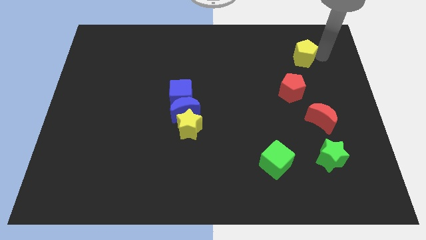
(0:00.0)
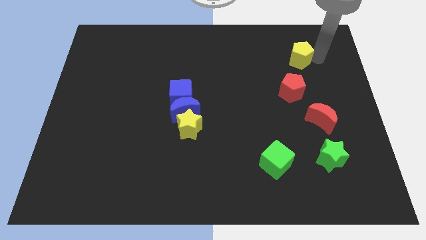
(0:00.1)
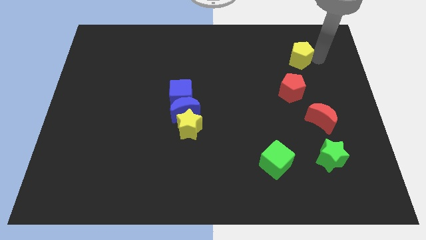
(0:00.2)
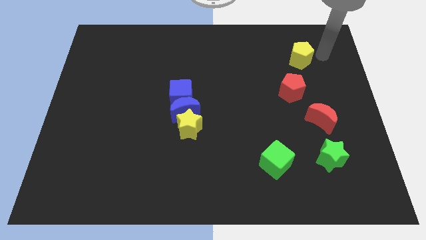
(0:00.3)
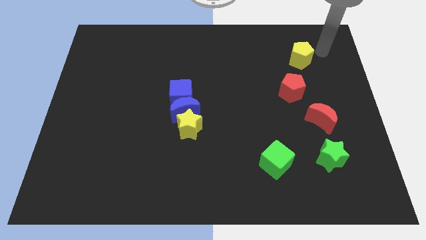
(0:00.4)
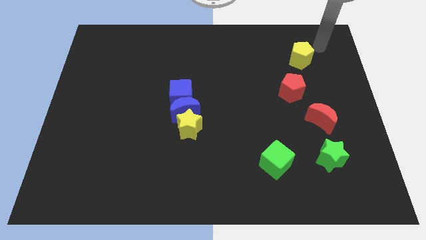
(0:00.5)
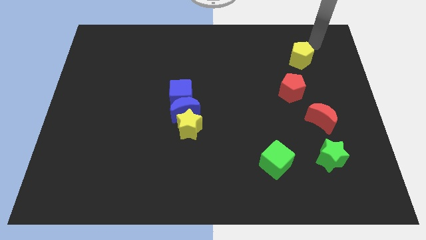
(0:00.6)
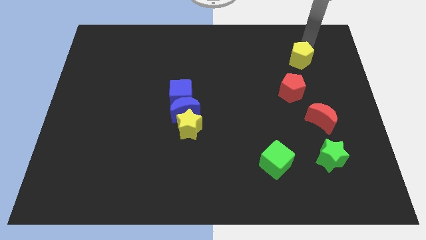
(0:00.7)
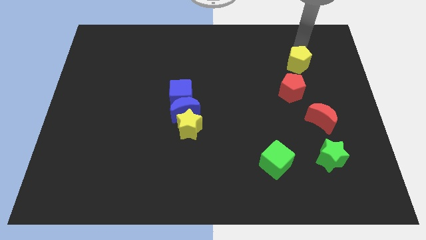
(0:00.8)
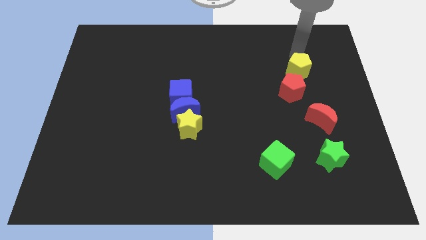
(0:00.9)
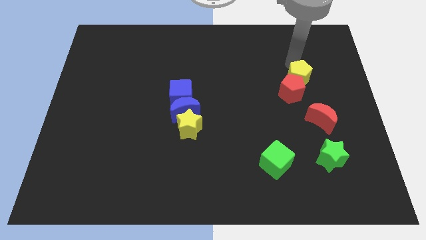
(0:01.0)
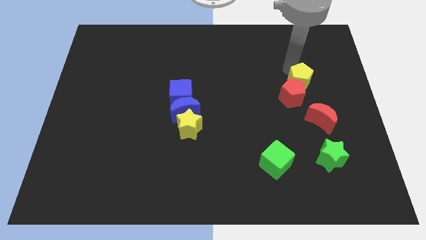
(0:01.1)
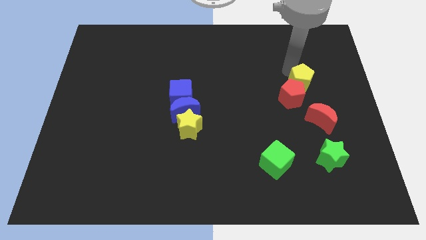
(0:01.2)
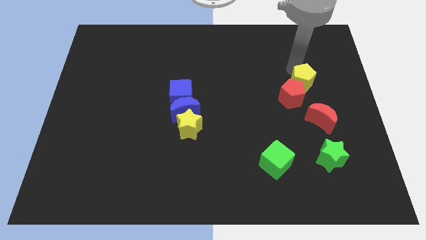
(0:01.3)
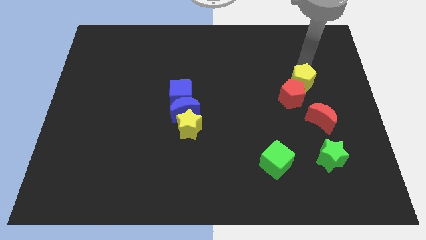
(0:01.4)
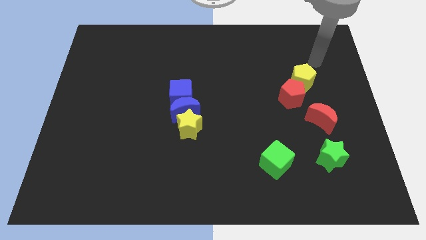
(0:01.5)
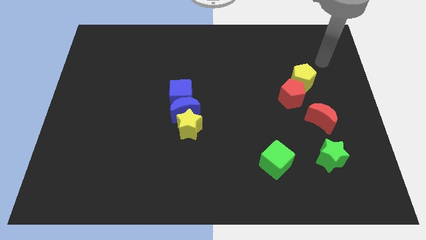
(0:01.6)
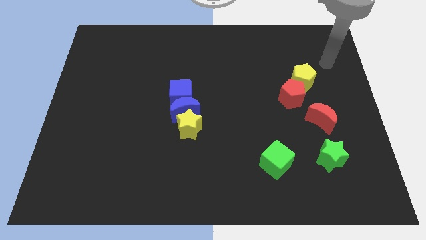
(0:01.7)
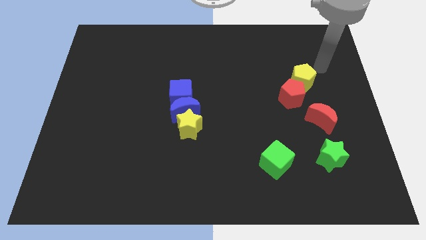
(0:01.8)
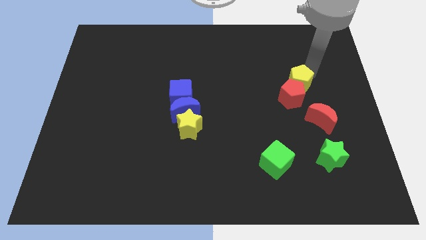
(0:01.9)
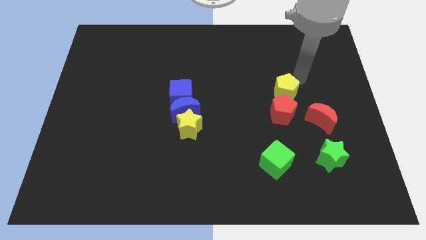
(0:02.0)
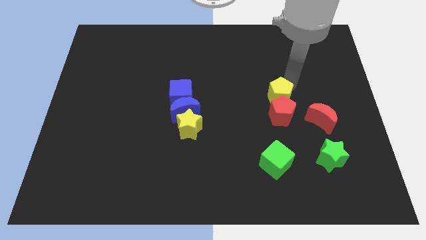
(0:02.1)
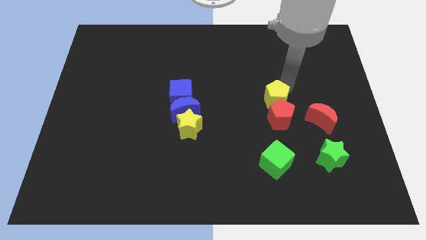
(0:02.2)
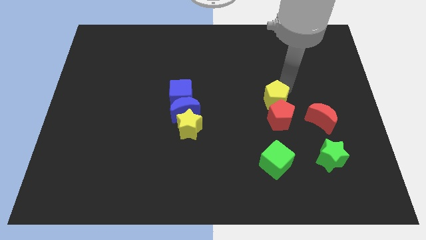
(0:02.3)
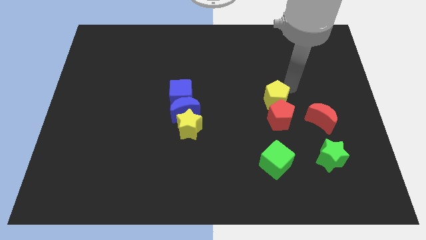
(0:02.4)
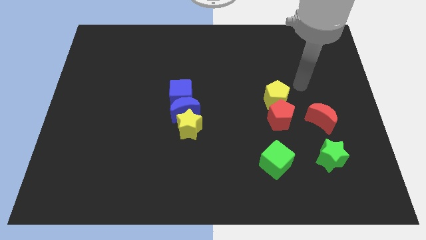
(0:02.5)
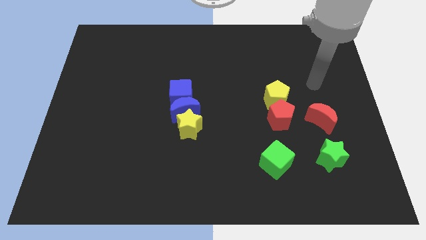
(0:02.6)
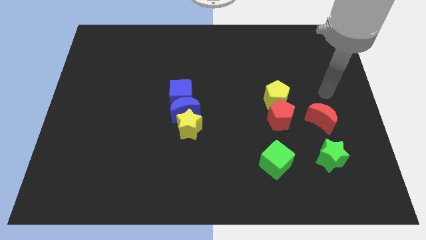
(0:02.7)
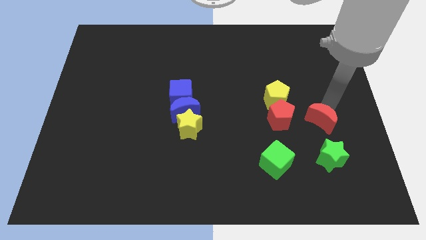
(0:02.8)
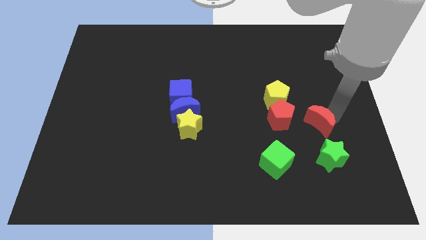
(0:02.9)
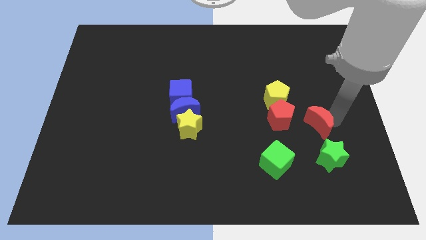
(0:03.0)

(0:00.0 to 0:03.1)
push the yellow pentagon to the top of the red pentagon

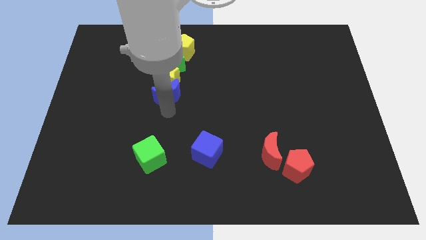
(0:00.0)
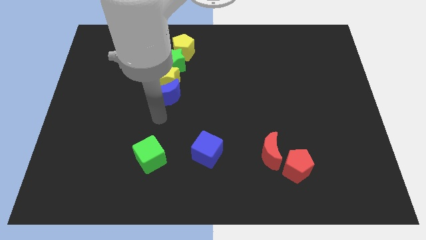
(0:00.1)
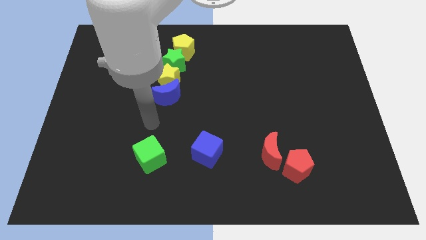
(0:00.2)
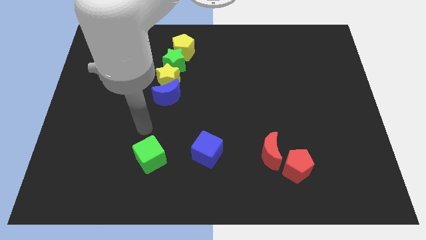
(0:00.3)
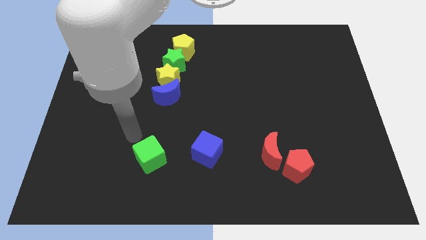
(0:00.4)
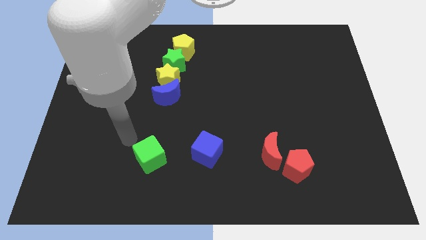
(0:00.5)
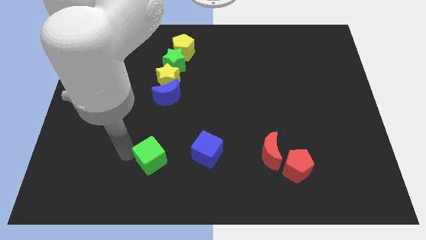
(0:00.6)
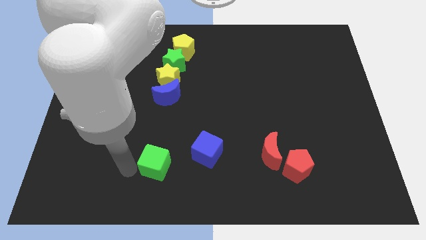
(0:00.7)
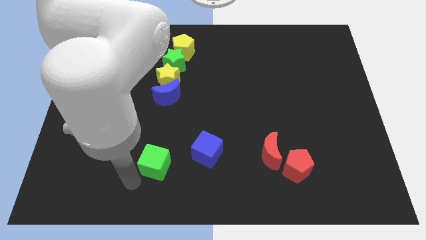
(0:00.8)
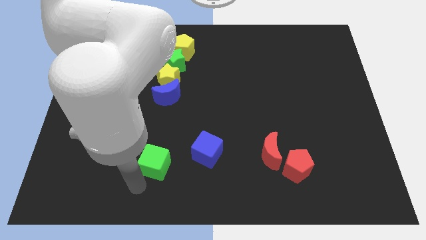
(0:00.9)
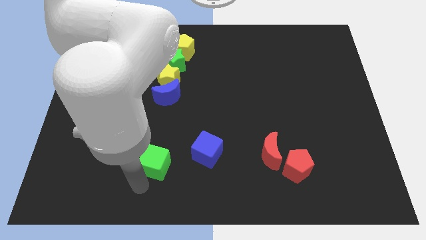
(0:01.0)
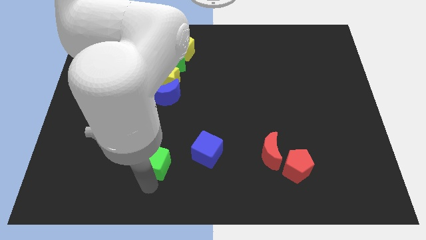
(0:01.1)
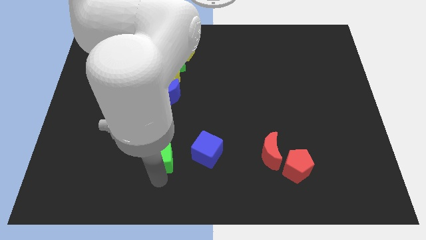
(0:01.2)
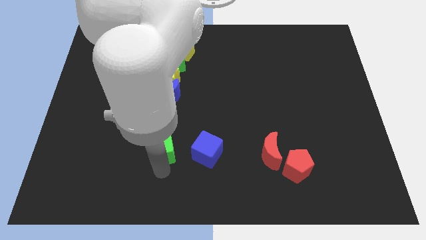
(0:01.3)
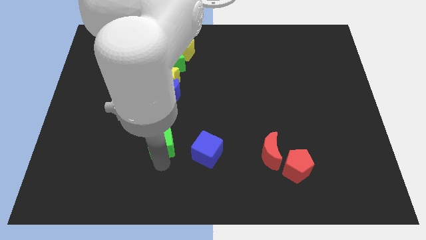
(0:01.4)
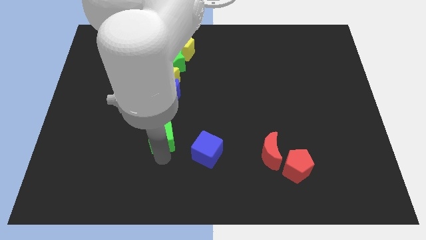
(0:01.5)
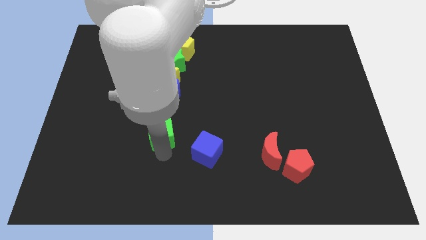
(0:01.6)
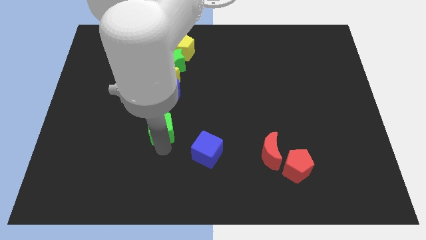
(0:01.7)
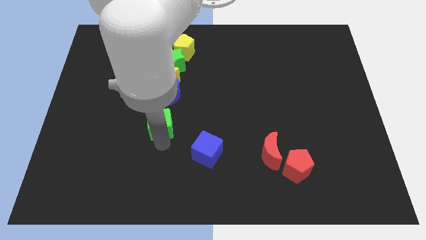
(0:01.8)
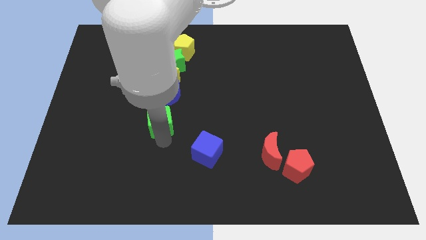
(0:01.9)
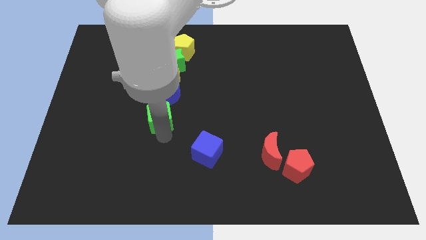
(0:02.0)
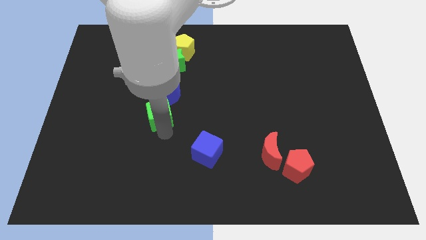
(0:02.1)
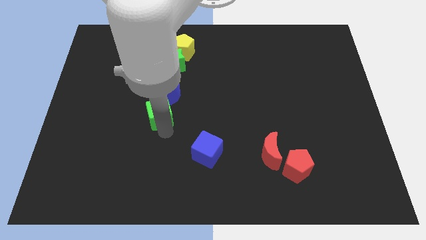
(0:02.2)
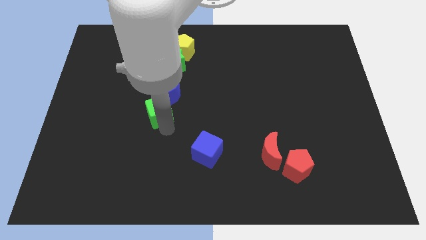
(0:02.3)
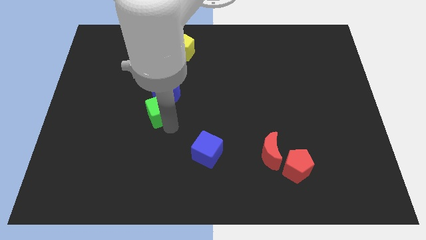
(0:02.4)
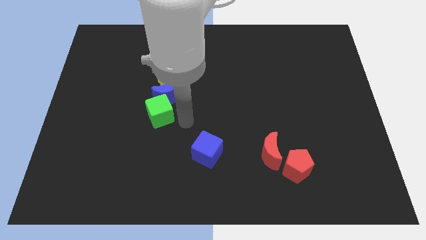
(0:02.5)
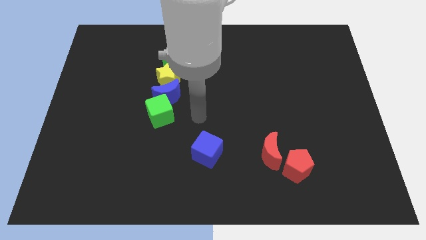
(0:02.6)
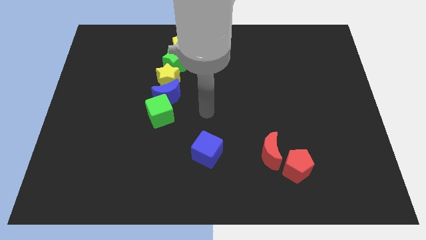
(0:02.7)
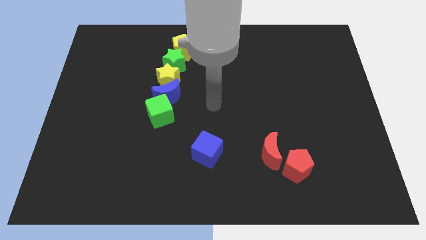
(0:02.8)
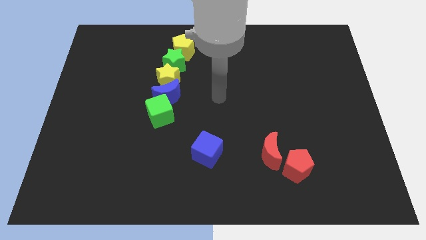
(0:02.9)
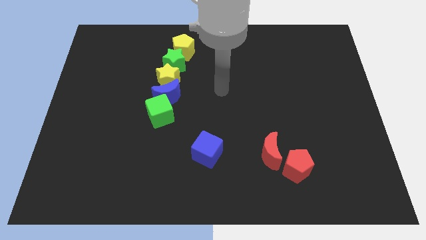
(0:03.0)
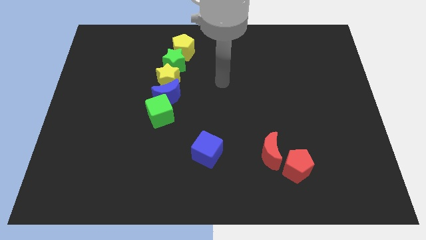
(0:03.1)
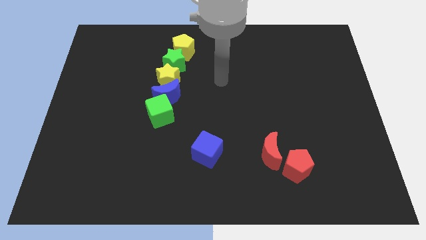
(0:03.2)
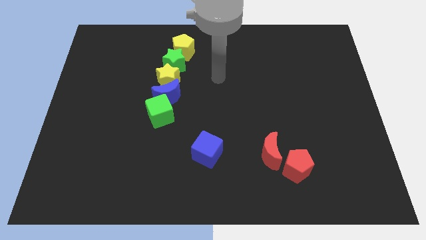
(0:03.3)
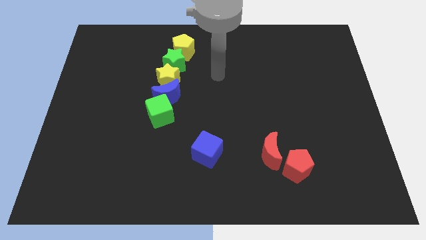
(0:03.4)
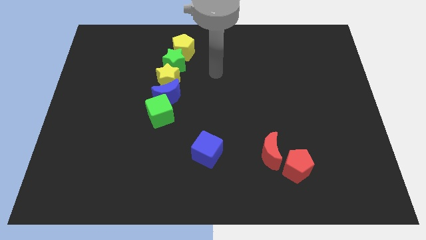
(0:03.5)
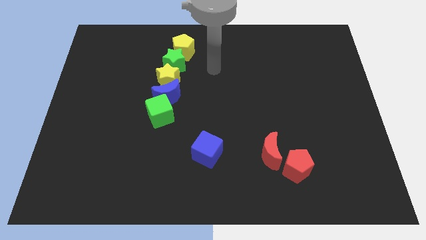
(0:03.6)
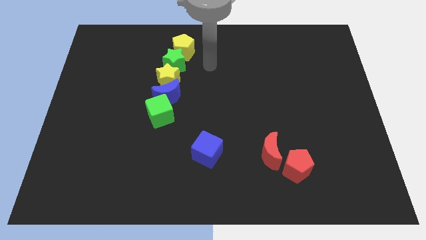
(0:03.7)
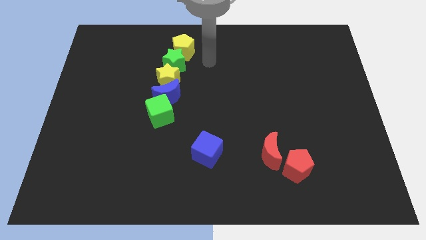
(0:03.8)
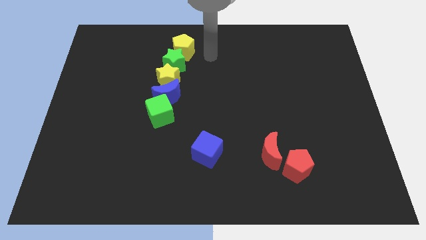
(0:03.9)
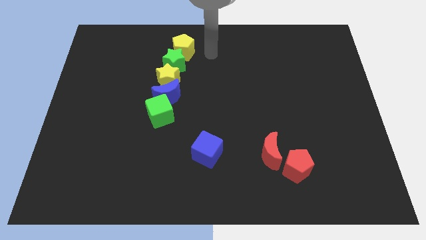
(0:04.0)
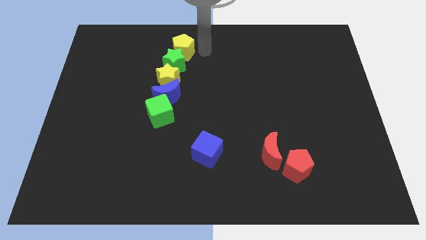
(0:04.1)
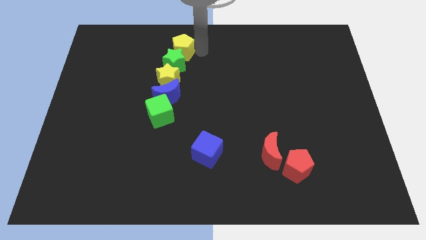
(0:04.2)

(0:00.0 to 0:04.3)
push the green cube to the bottom of the blue moon

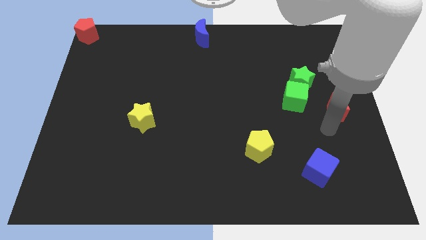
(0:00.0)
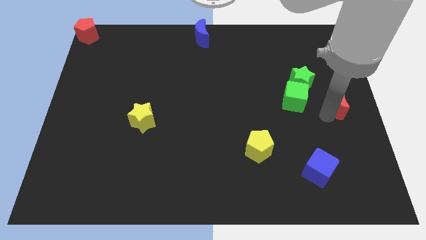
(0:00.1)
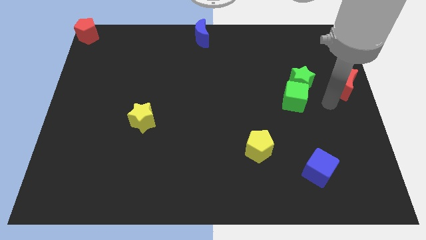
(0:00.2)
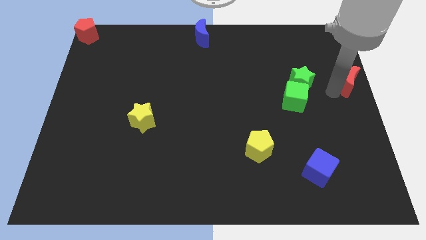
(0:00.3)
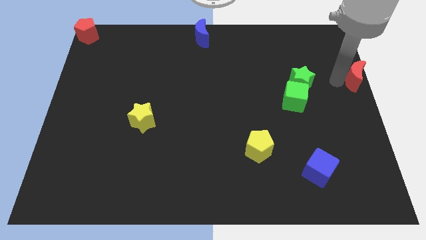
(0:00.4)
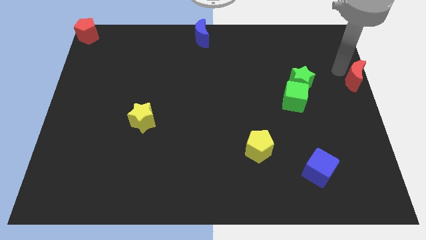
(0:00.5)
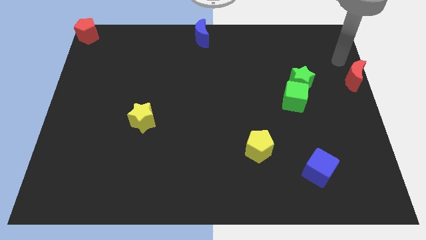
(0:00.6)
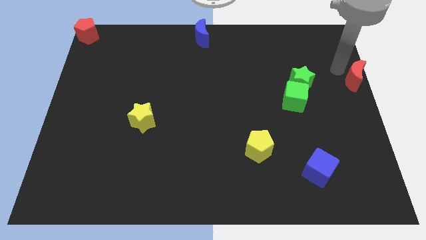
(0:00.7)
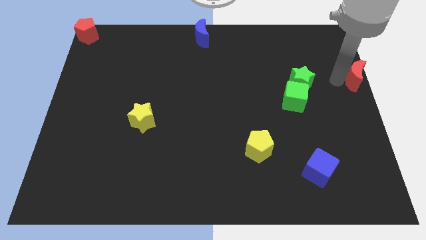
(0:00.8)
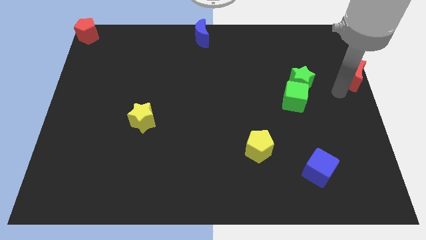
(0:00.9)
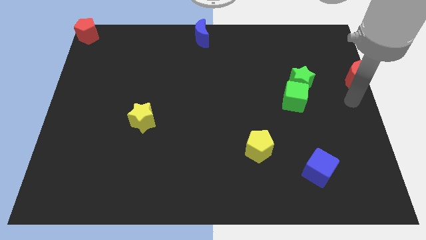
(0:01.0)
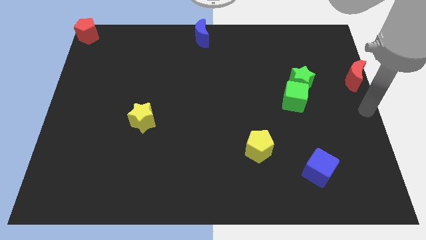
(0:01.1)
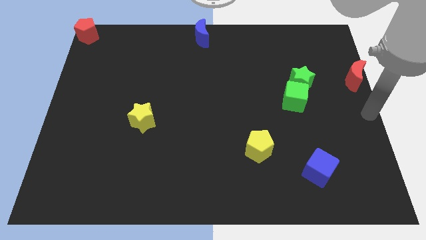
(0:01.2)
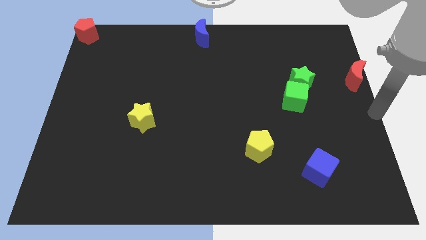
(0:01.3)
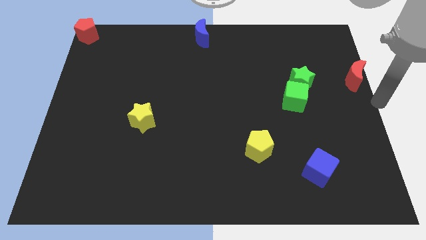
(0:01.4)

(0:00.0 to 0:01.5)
slide the red moon to the right side of the board

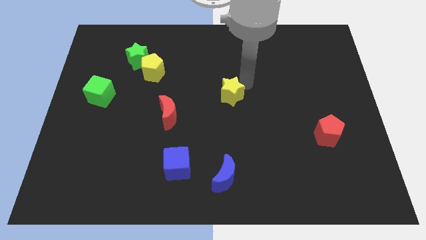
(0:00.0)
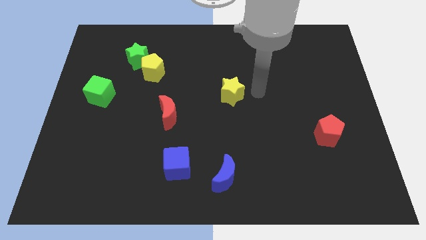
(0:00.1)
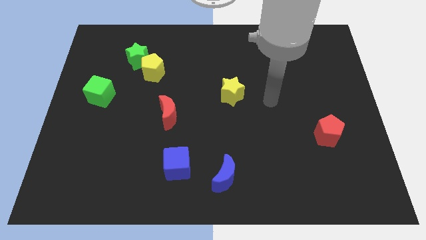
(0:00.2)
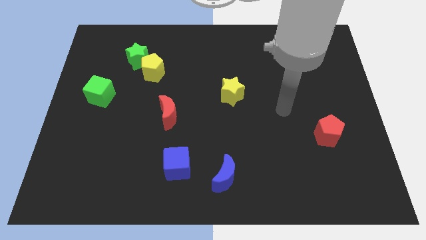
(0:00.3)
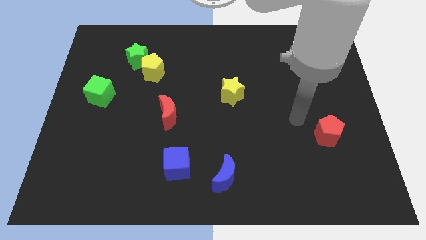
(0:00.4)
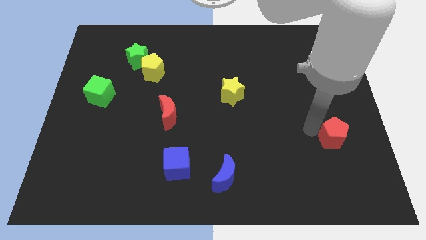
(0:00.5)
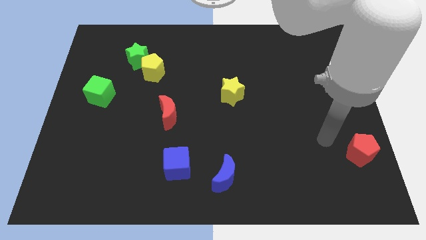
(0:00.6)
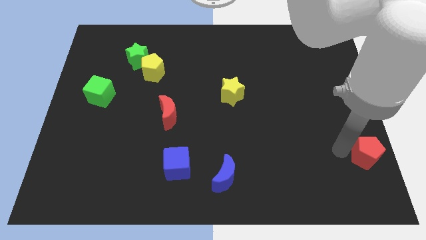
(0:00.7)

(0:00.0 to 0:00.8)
push the red pentagon slightly to the right
